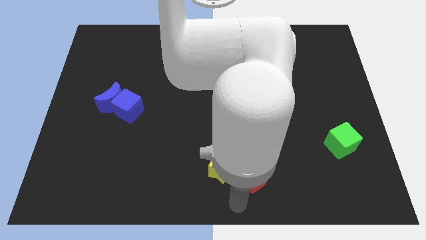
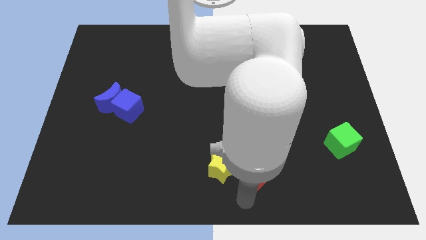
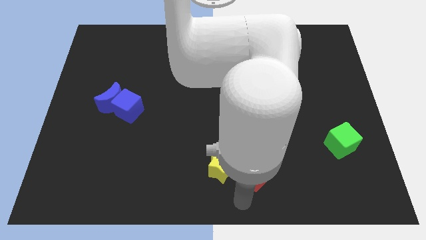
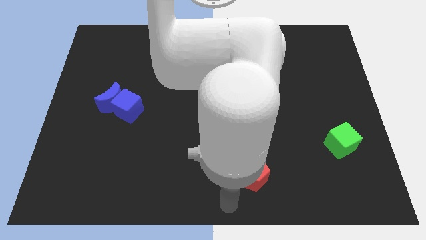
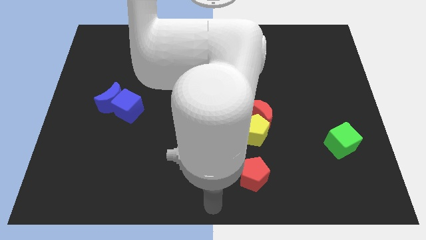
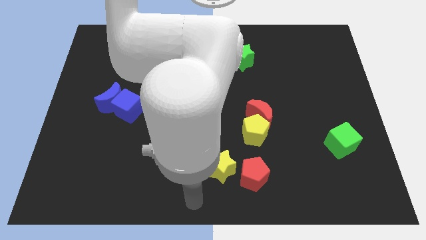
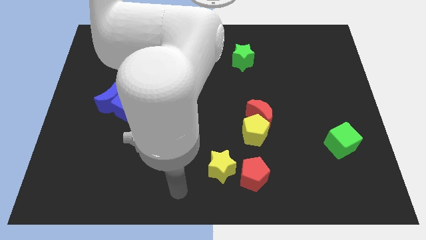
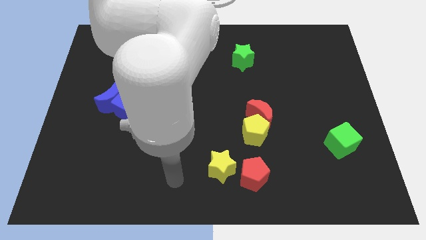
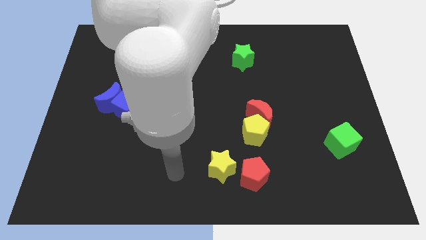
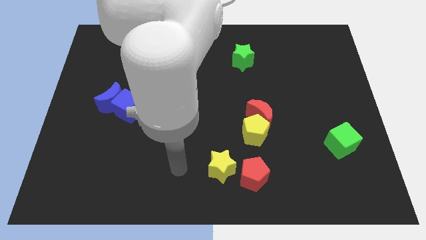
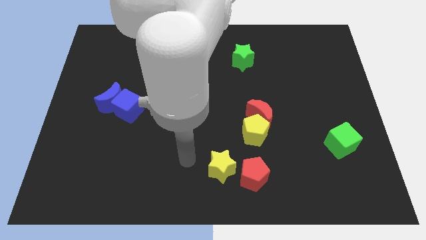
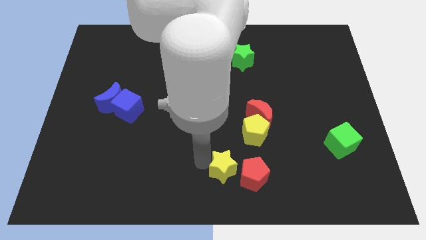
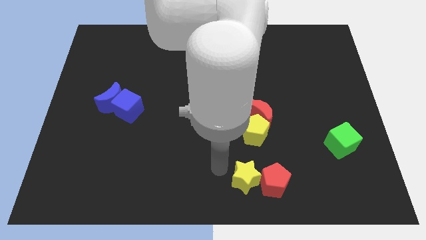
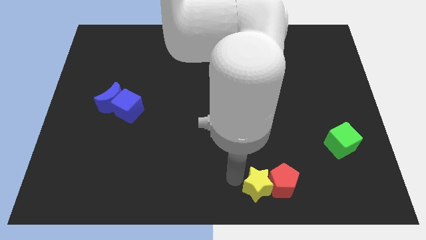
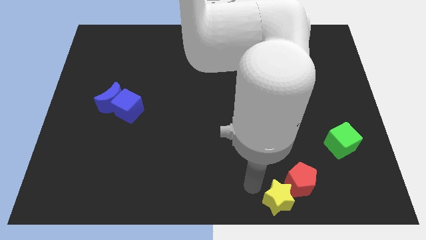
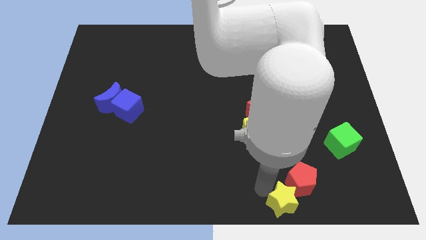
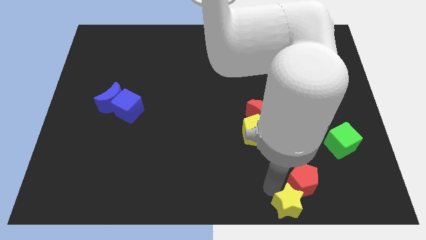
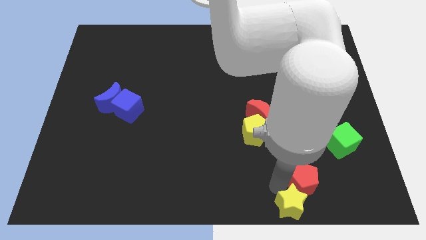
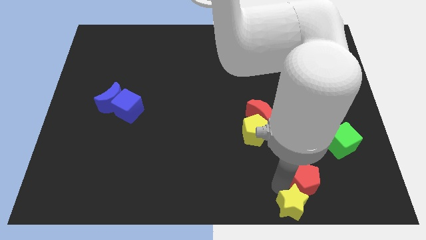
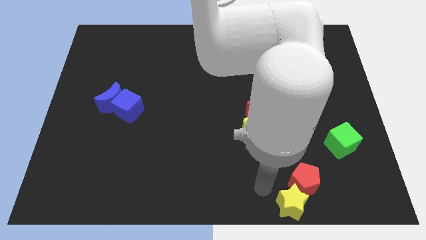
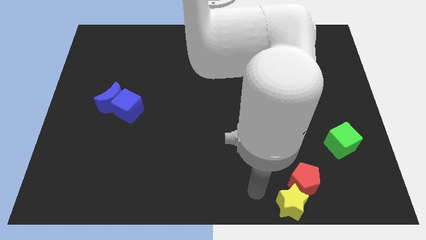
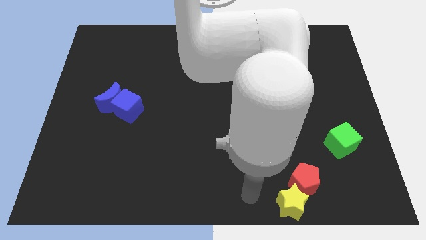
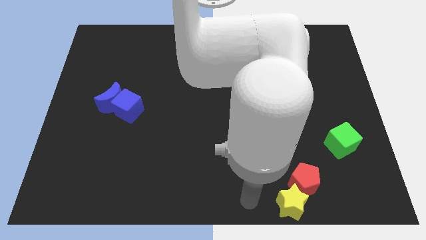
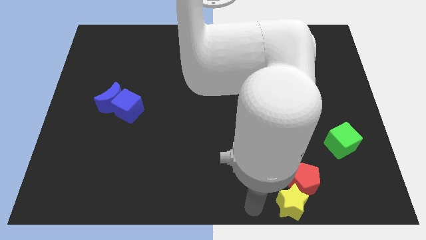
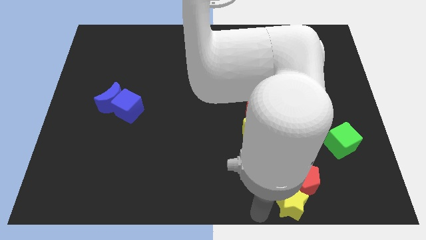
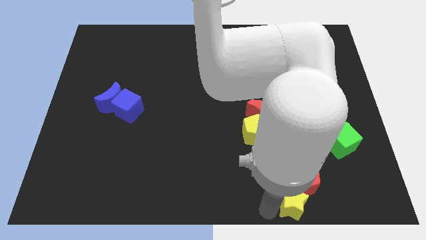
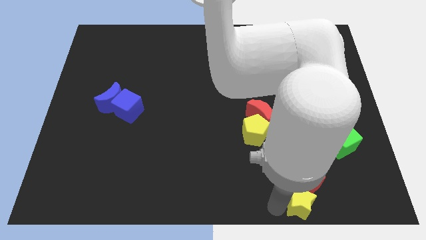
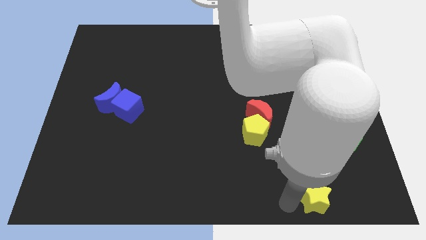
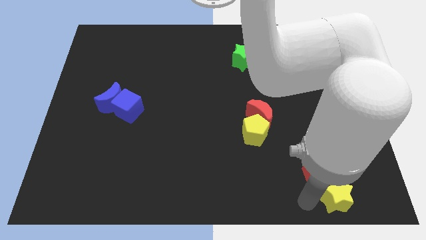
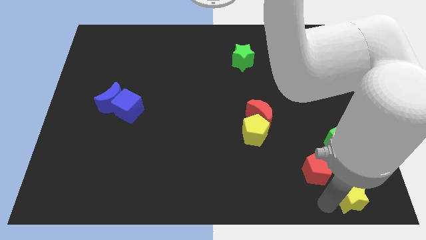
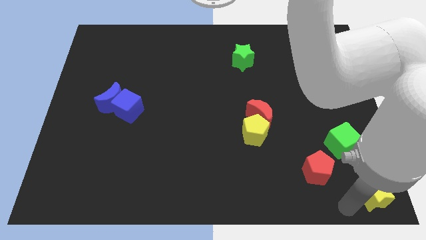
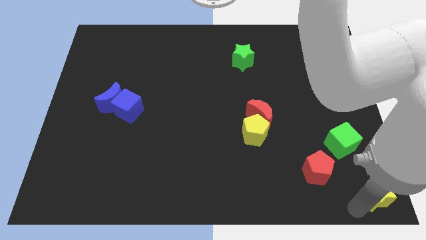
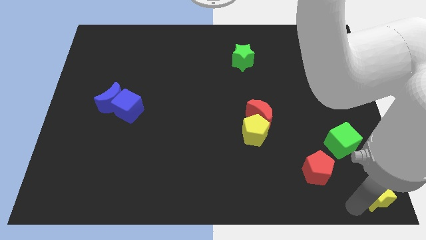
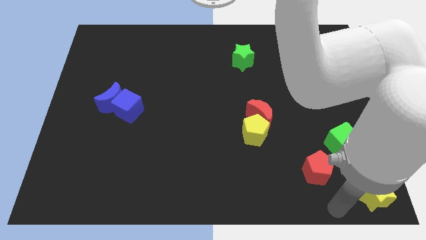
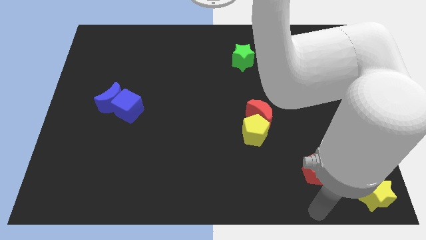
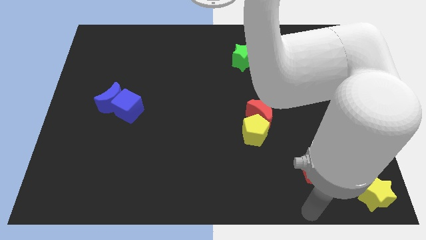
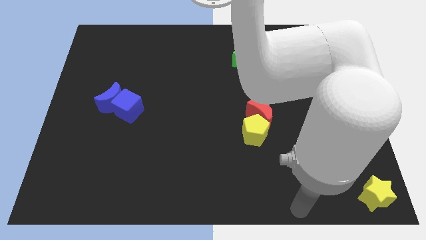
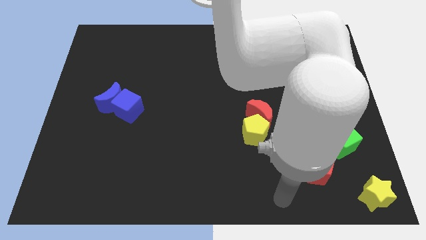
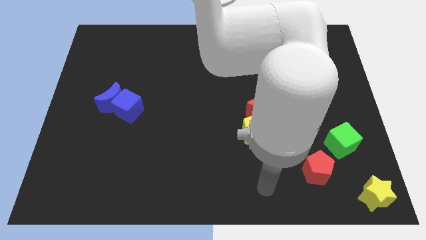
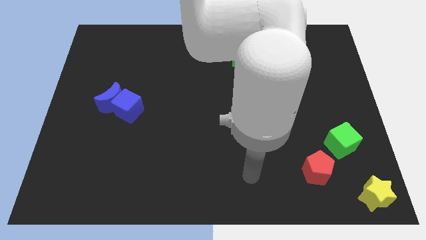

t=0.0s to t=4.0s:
move the yellow star to the bottom right corner of the board

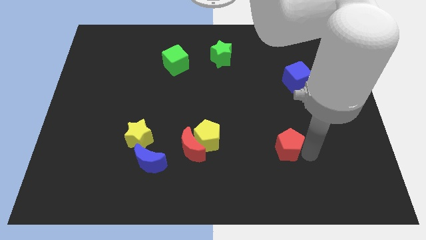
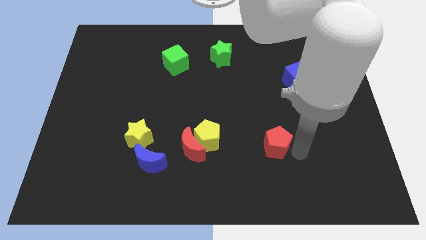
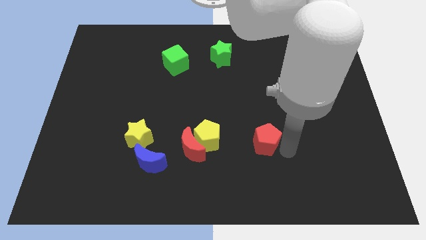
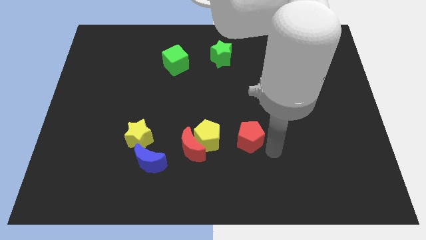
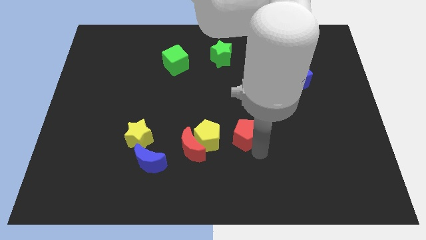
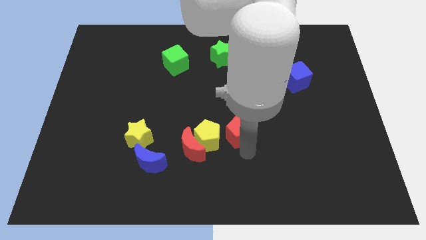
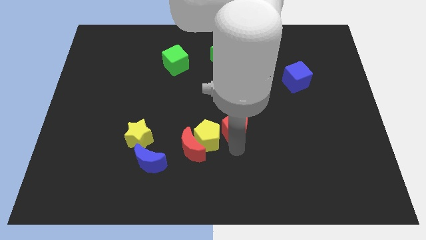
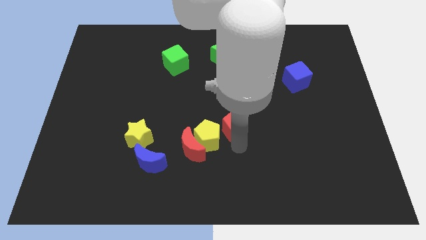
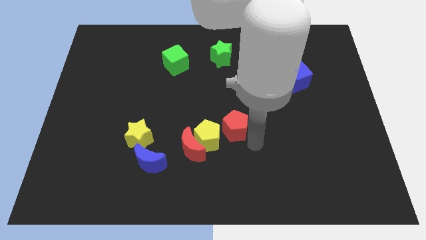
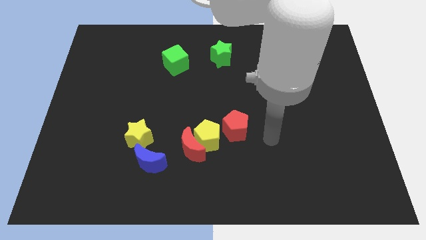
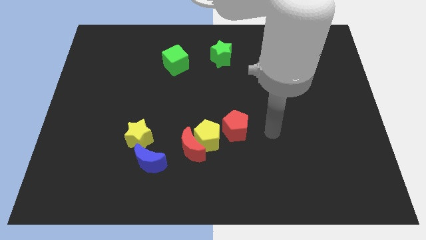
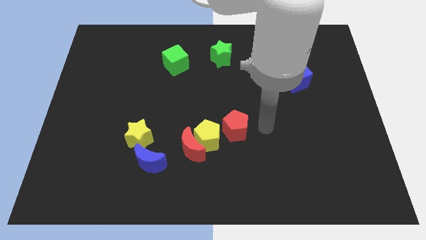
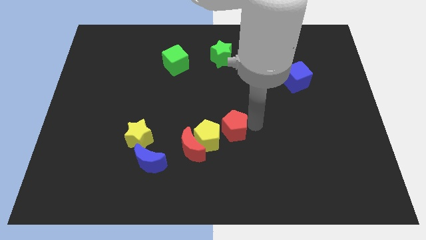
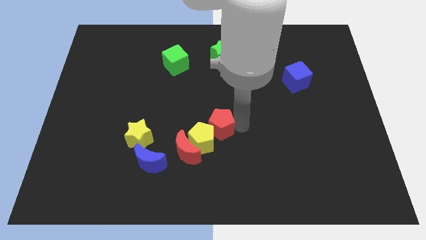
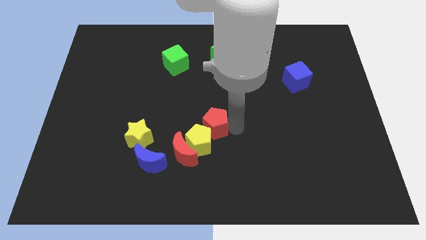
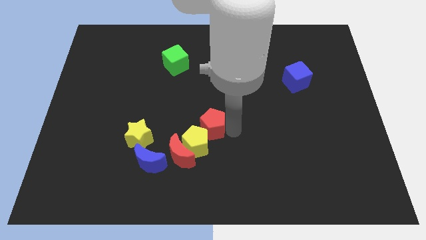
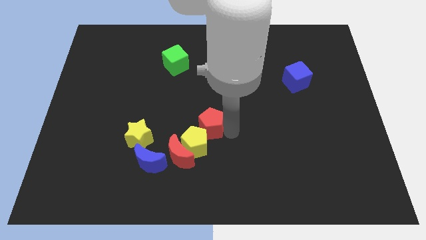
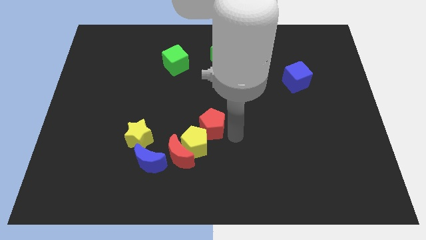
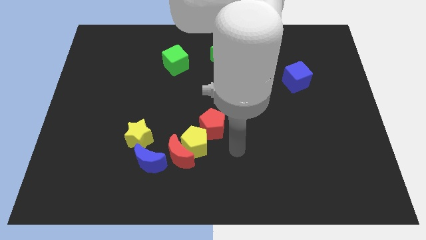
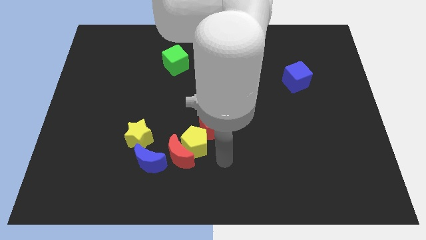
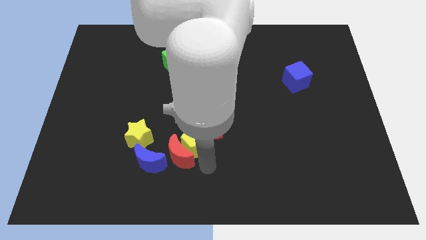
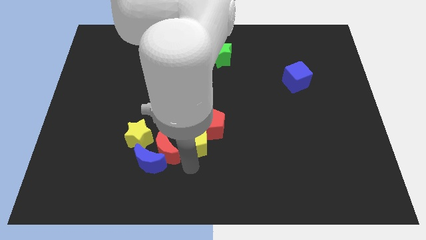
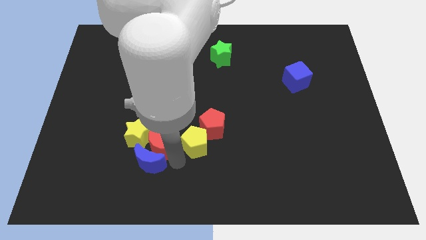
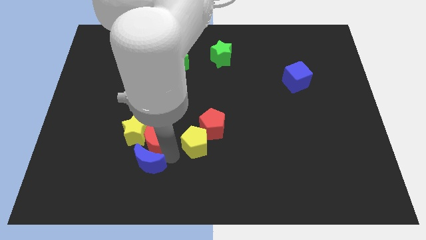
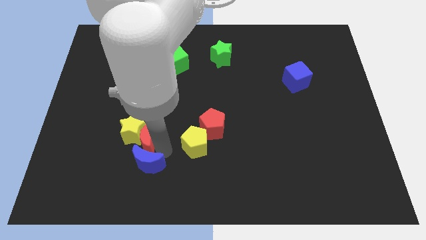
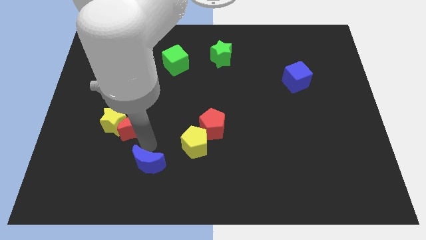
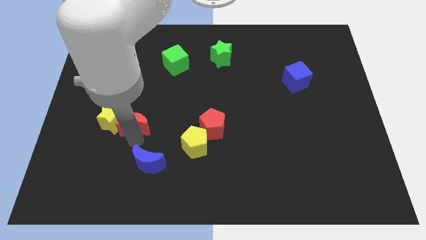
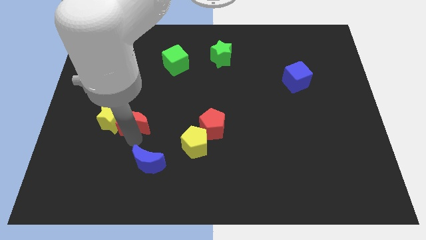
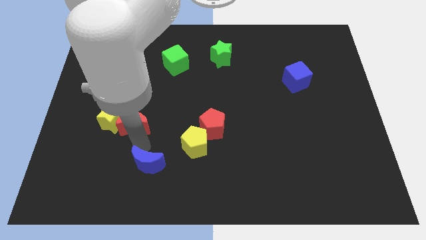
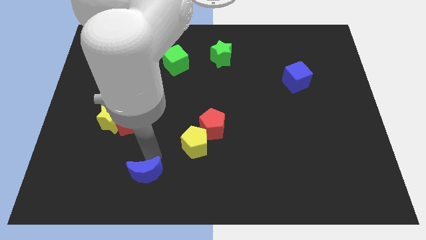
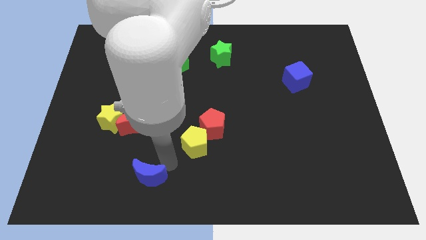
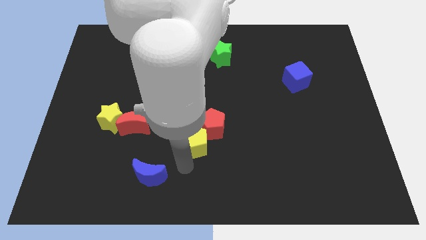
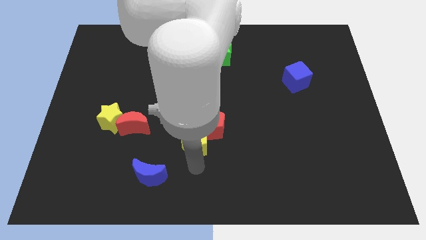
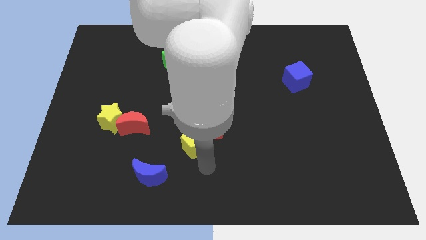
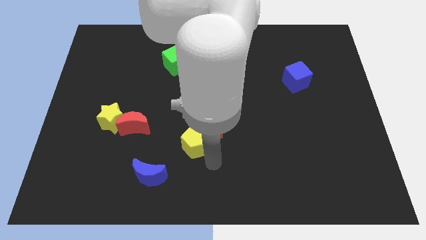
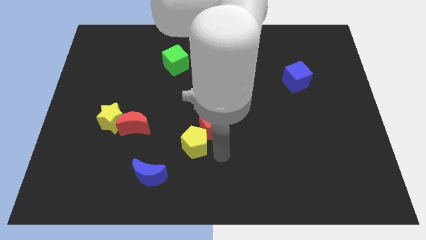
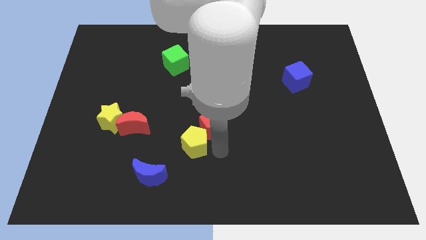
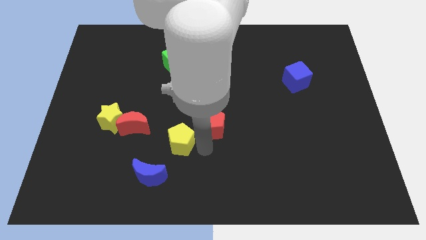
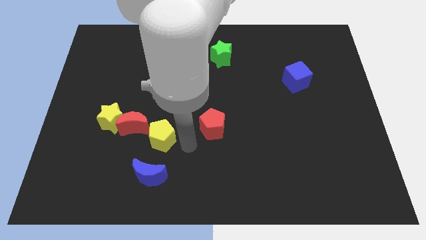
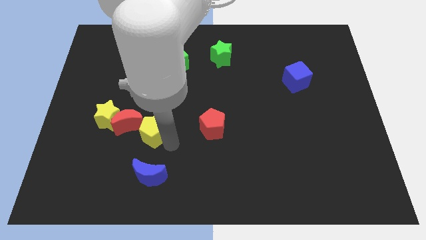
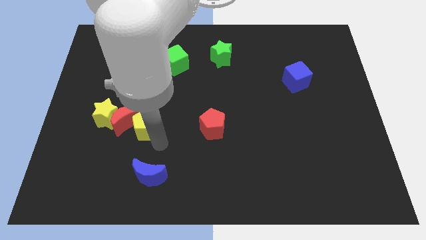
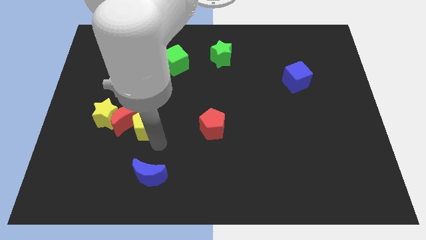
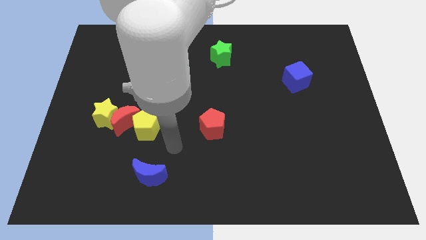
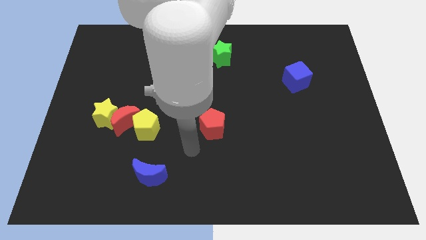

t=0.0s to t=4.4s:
move red pentagon to the center

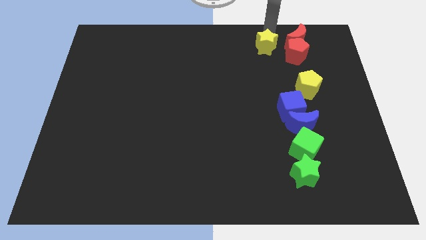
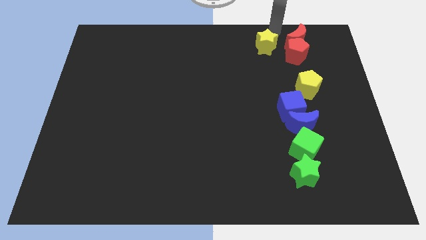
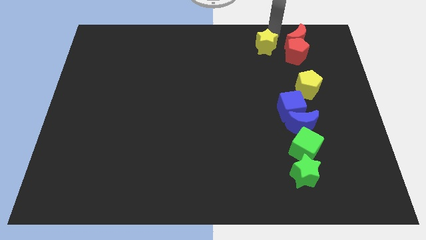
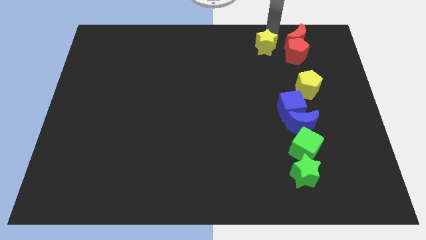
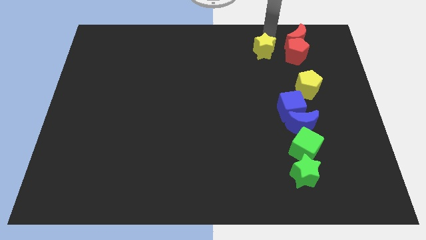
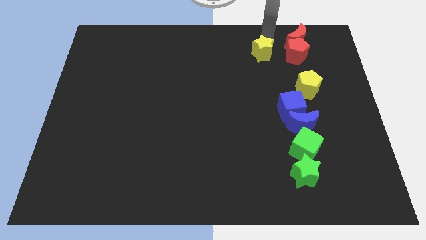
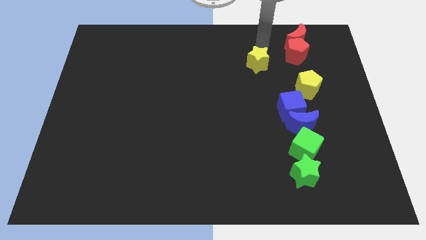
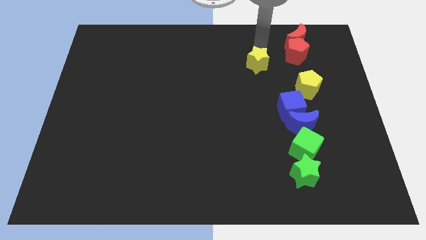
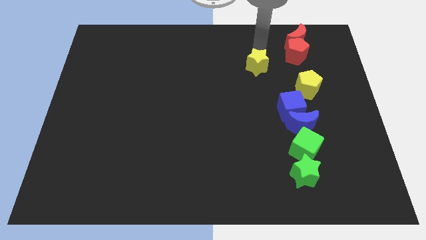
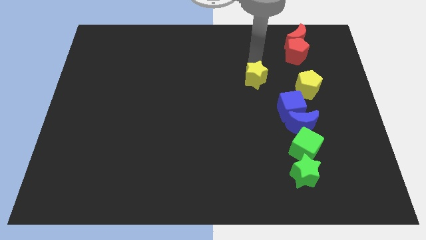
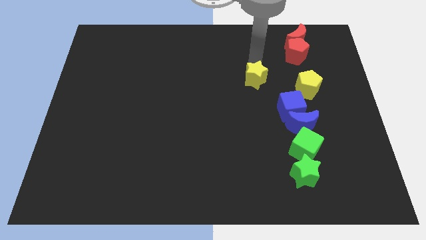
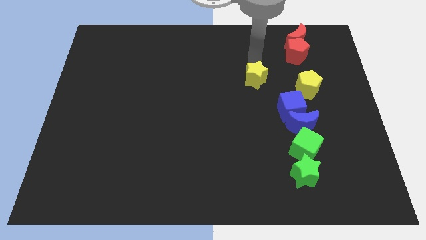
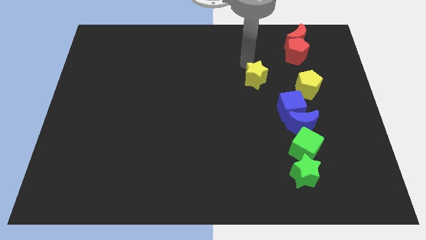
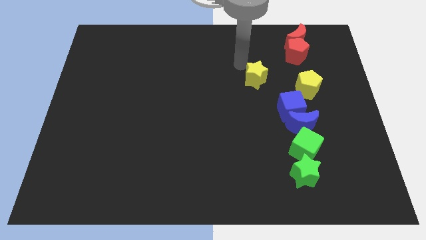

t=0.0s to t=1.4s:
push the yellow star slightly downward
